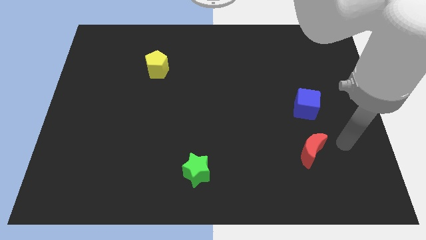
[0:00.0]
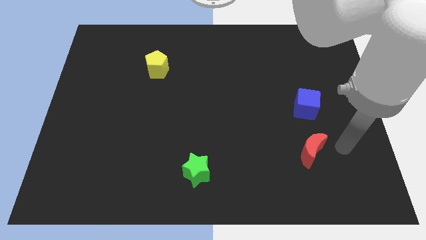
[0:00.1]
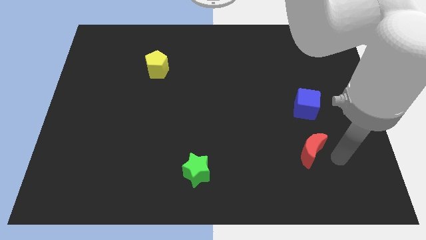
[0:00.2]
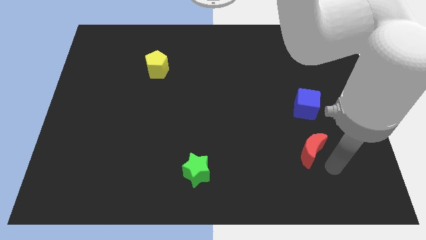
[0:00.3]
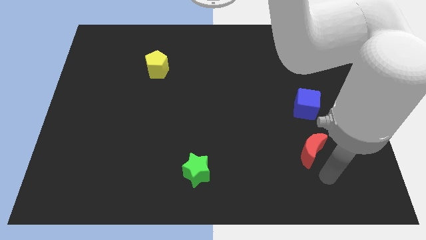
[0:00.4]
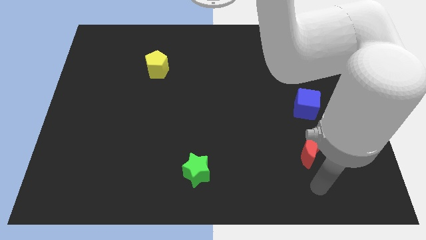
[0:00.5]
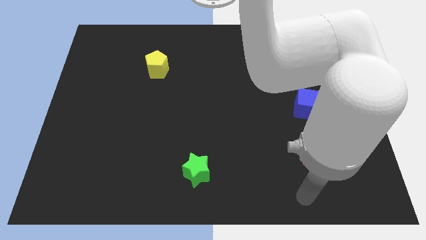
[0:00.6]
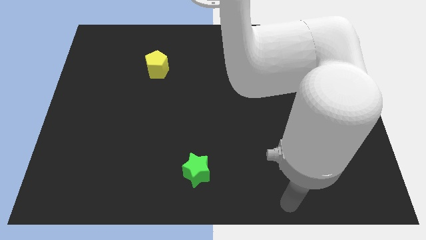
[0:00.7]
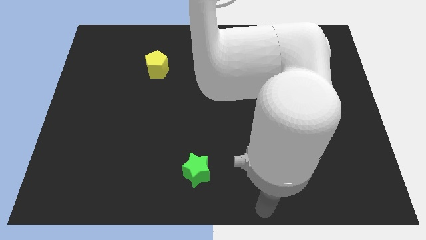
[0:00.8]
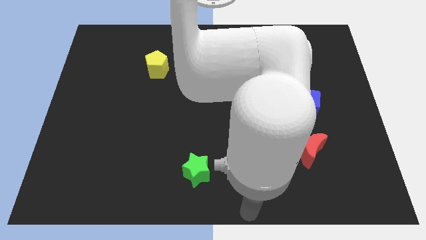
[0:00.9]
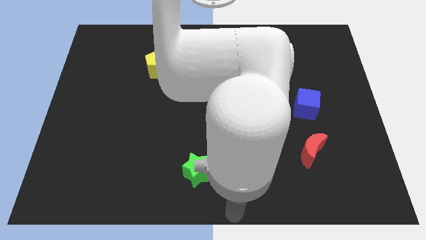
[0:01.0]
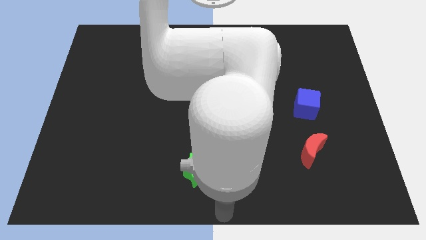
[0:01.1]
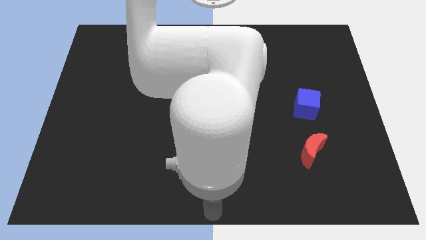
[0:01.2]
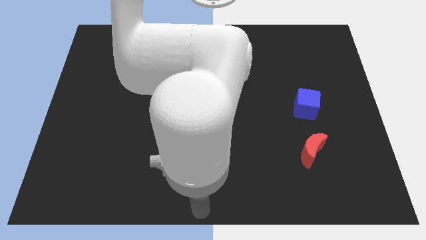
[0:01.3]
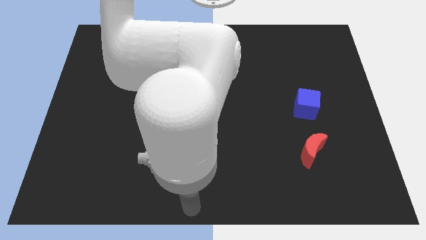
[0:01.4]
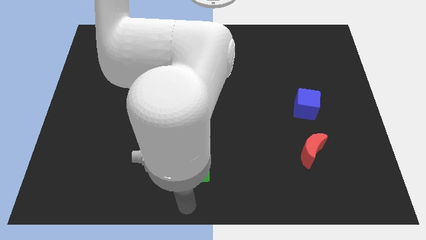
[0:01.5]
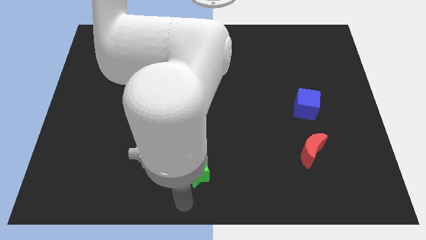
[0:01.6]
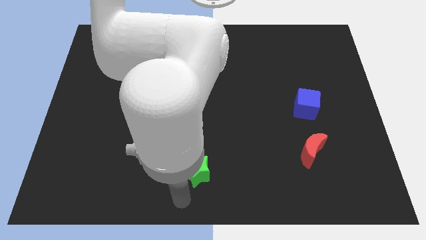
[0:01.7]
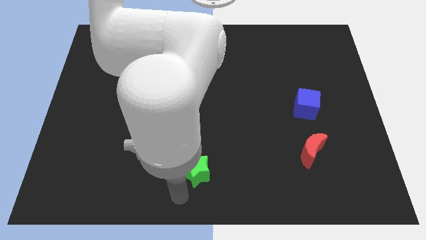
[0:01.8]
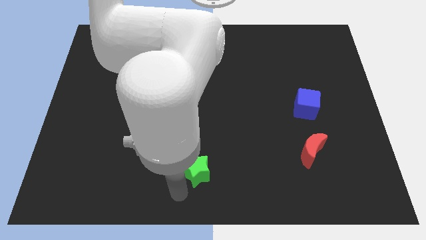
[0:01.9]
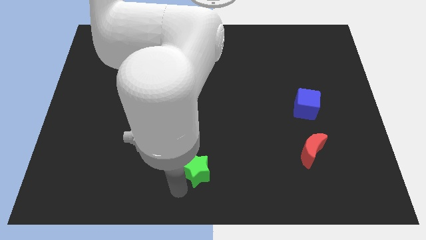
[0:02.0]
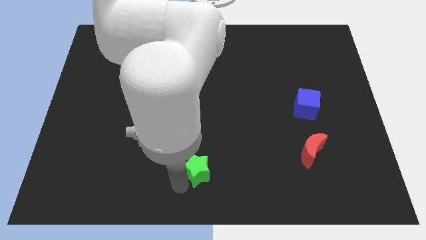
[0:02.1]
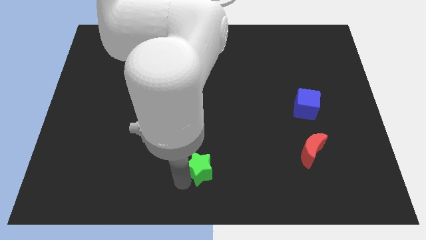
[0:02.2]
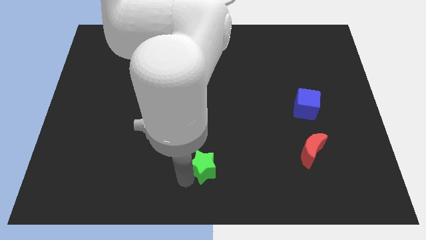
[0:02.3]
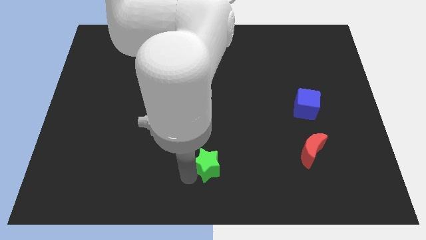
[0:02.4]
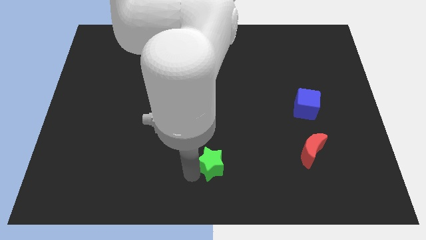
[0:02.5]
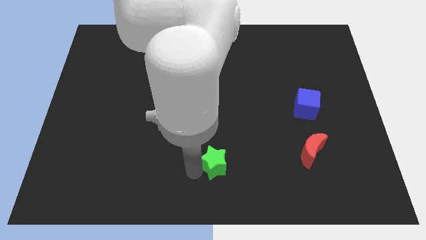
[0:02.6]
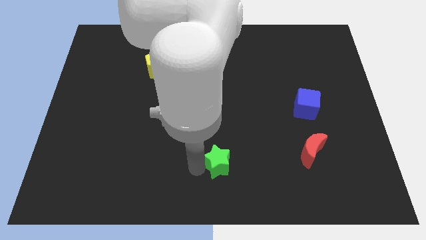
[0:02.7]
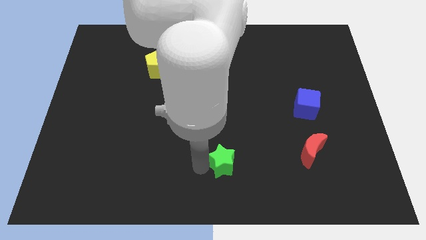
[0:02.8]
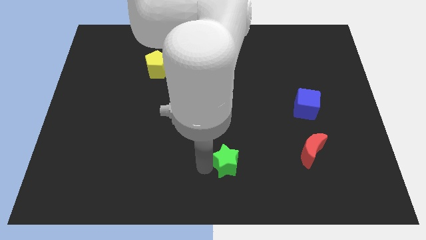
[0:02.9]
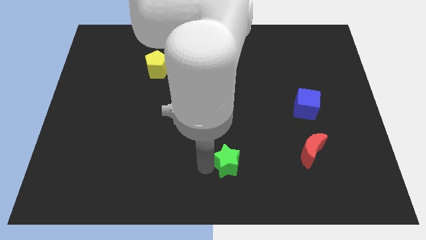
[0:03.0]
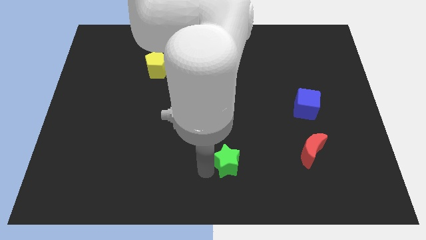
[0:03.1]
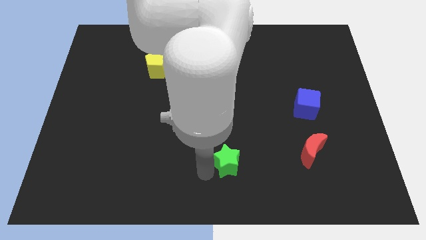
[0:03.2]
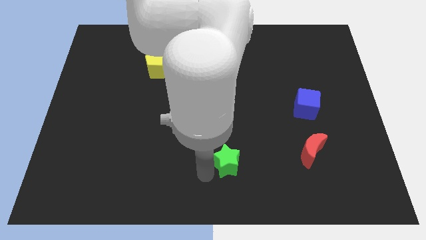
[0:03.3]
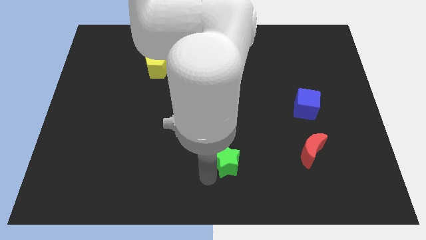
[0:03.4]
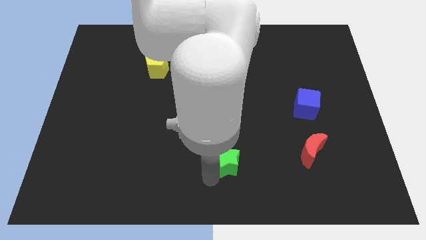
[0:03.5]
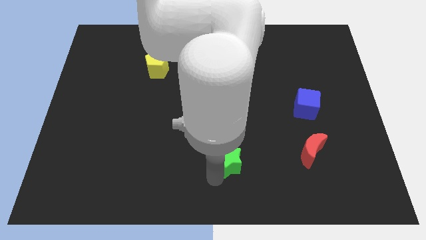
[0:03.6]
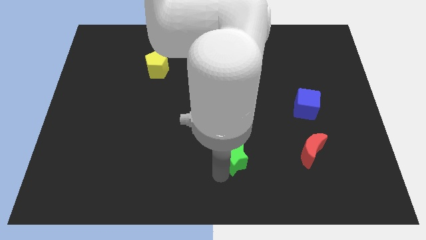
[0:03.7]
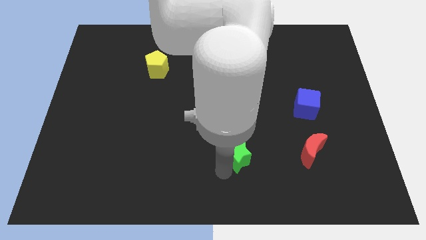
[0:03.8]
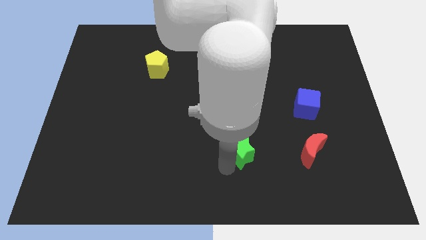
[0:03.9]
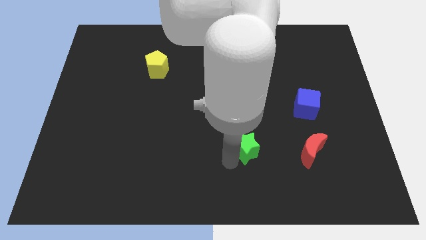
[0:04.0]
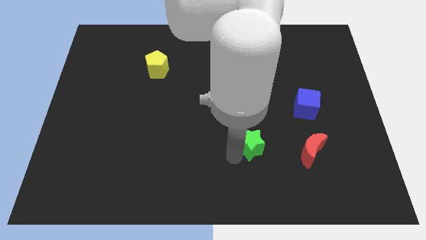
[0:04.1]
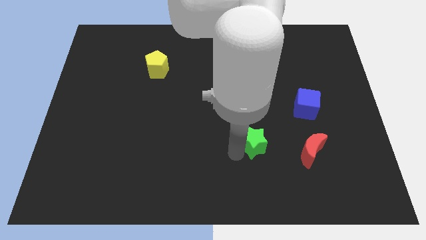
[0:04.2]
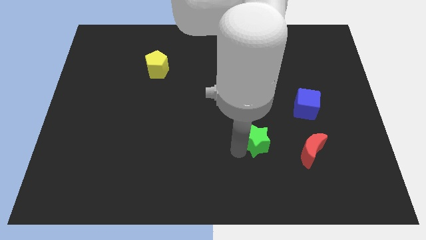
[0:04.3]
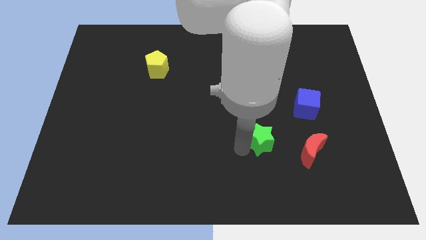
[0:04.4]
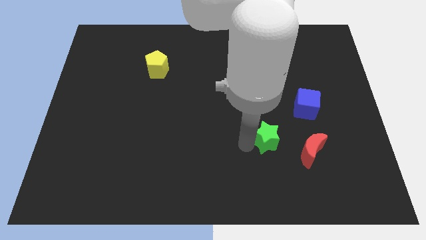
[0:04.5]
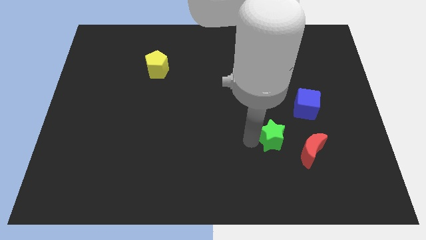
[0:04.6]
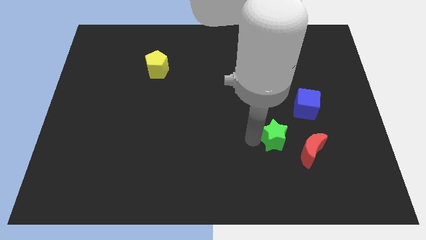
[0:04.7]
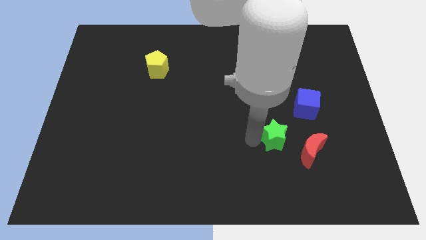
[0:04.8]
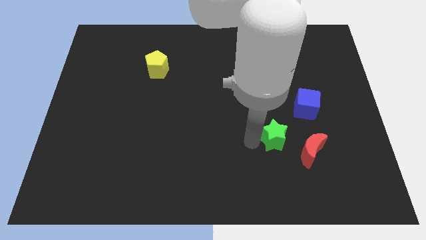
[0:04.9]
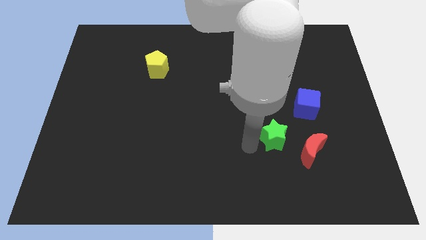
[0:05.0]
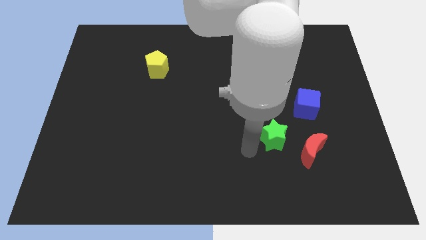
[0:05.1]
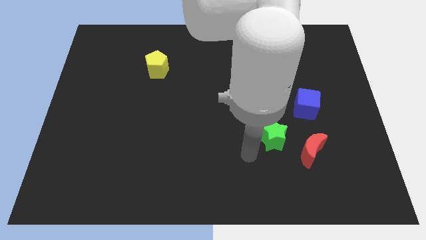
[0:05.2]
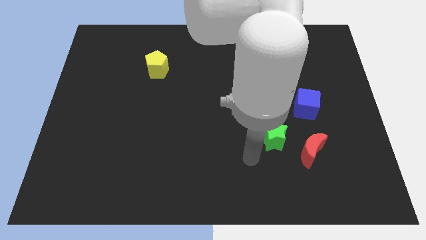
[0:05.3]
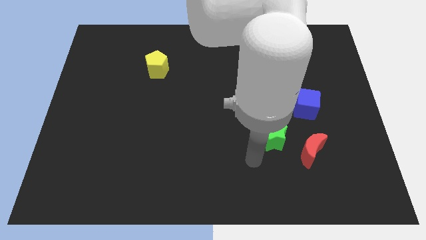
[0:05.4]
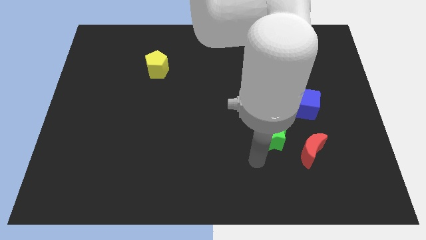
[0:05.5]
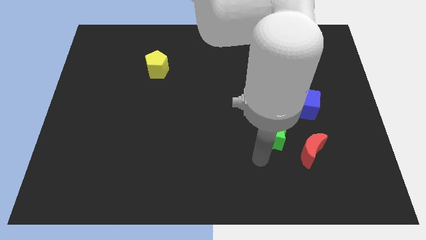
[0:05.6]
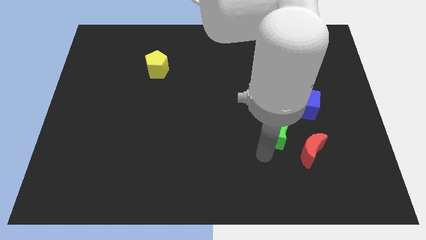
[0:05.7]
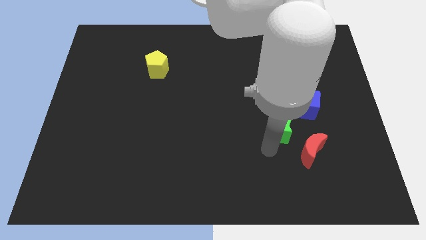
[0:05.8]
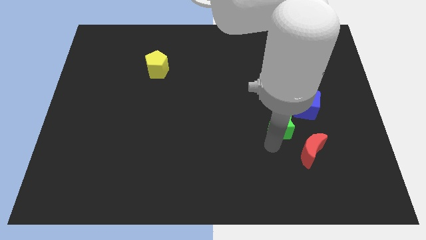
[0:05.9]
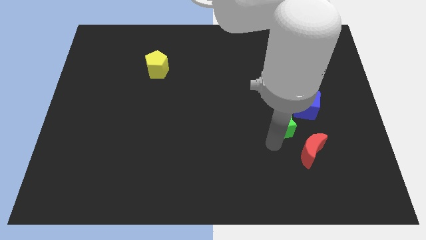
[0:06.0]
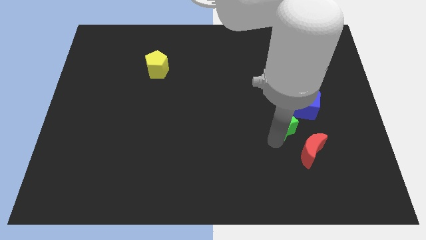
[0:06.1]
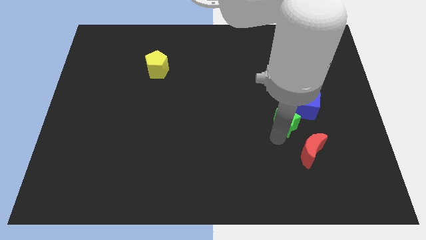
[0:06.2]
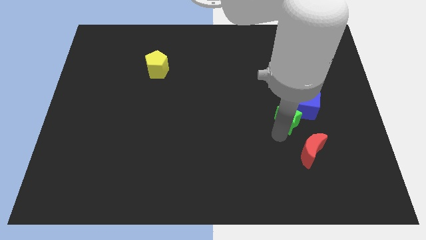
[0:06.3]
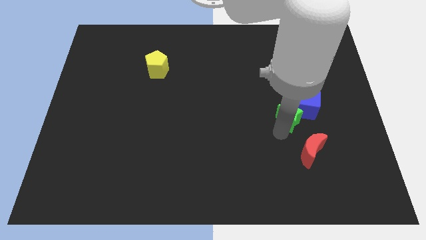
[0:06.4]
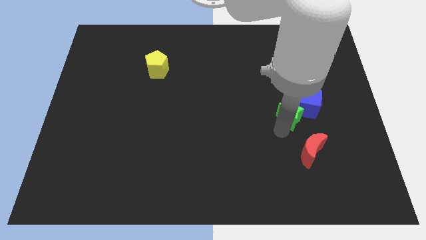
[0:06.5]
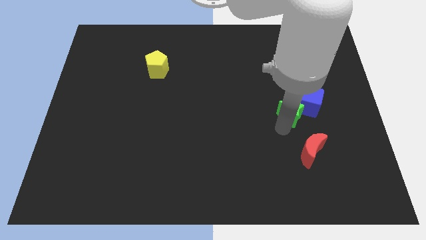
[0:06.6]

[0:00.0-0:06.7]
move the green star towards the blue block

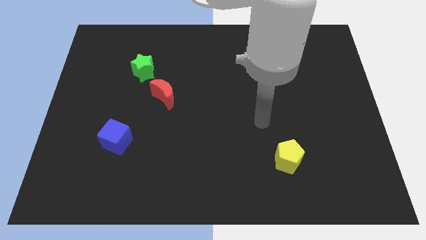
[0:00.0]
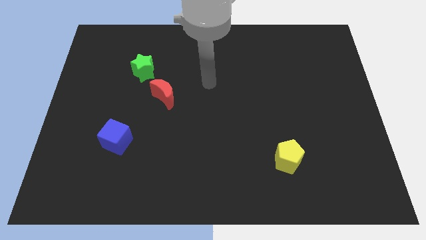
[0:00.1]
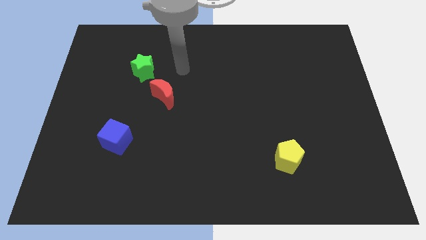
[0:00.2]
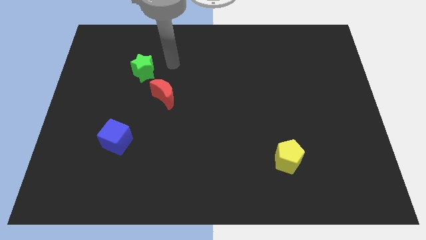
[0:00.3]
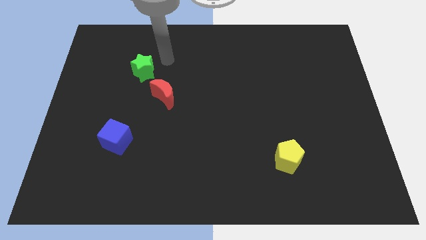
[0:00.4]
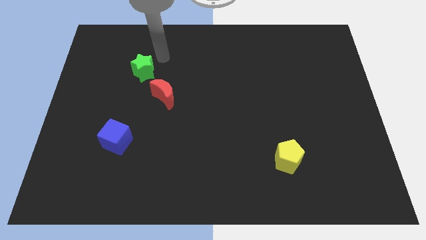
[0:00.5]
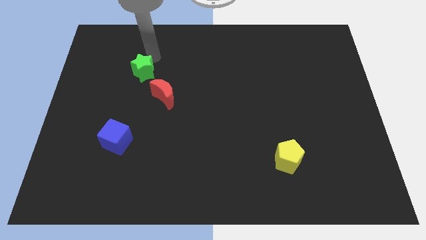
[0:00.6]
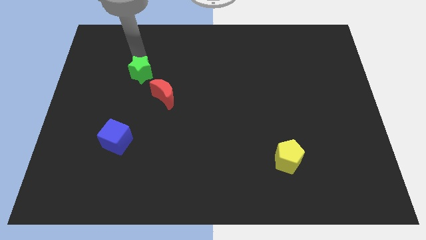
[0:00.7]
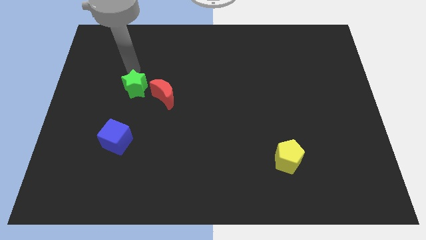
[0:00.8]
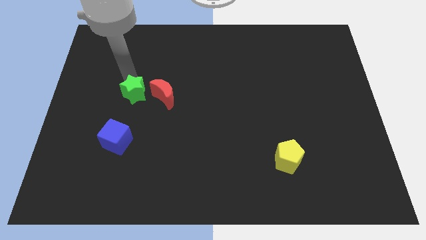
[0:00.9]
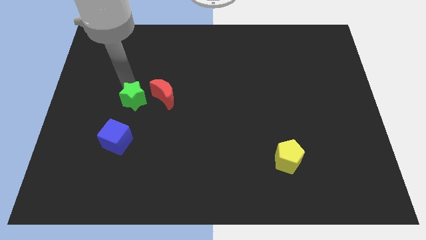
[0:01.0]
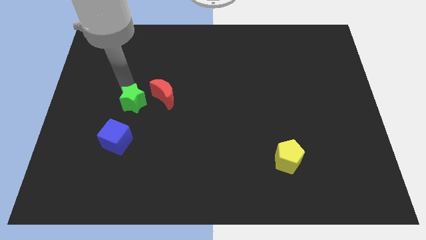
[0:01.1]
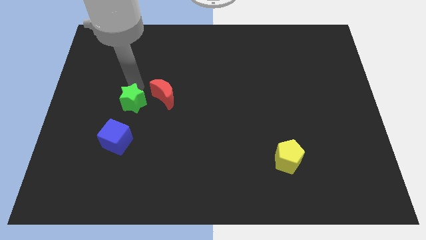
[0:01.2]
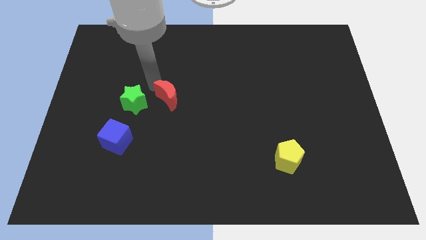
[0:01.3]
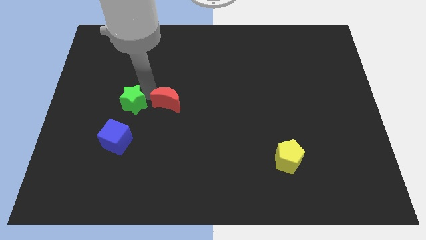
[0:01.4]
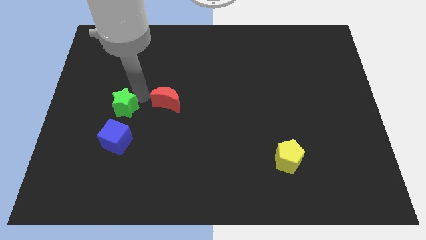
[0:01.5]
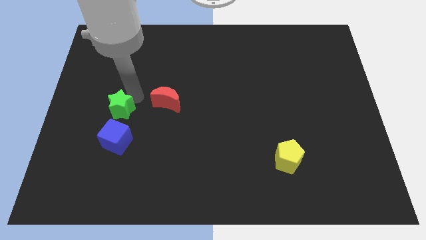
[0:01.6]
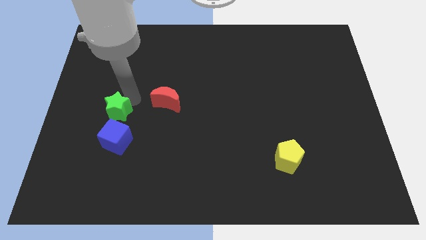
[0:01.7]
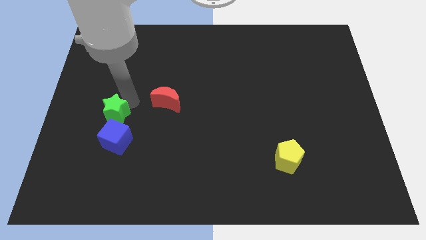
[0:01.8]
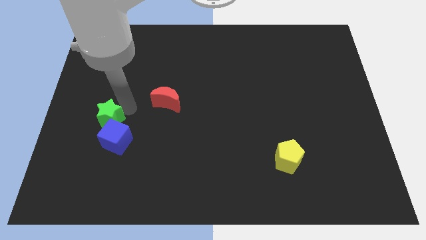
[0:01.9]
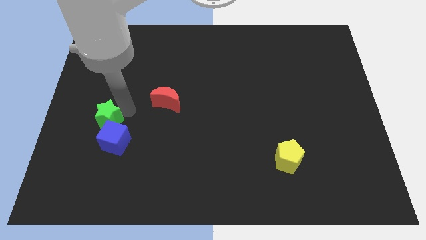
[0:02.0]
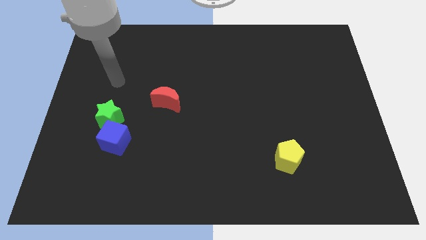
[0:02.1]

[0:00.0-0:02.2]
push the green block towards the cube
